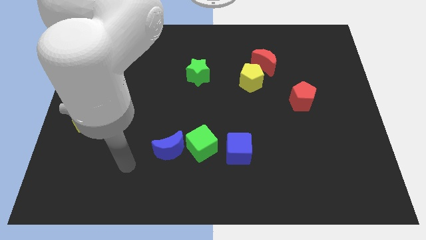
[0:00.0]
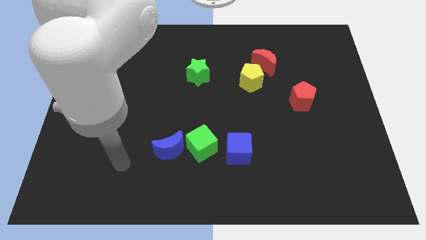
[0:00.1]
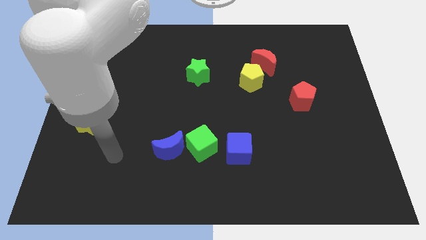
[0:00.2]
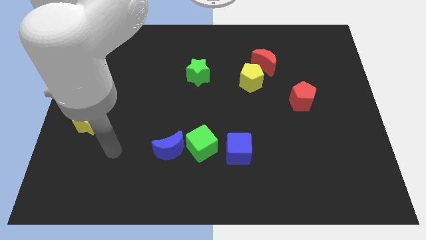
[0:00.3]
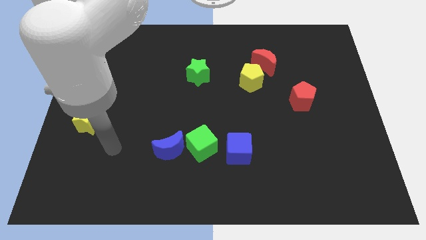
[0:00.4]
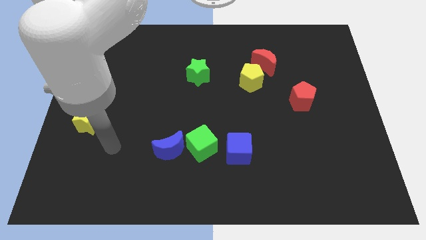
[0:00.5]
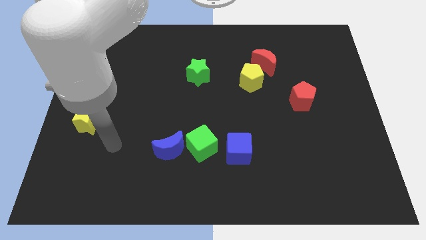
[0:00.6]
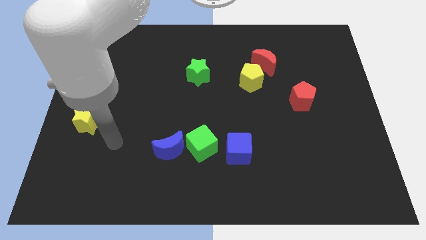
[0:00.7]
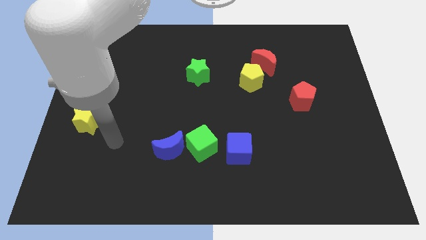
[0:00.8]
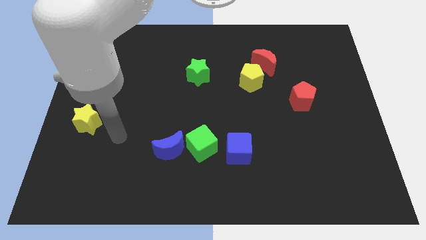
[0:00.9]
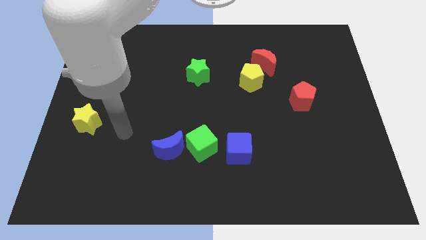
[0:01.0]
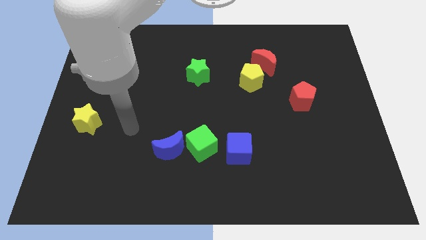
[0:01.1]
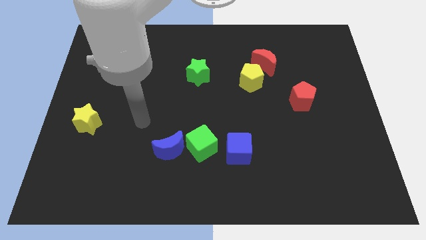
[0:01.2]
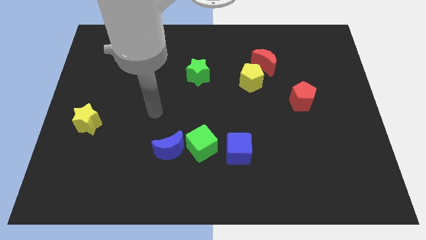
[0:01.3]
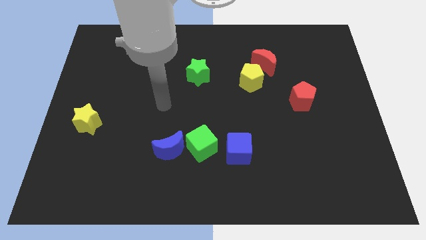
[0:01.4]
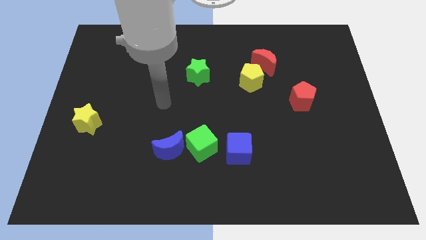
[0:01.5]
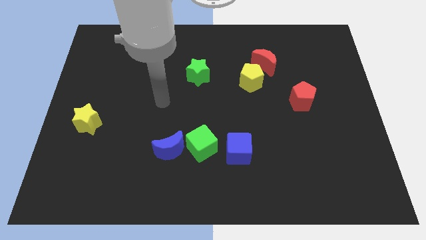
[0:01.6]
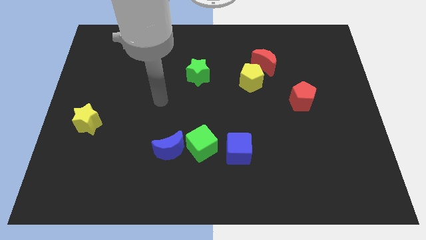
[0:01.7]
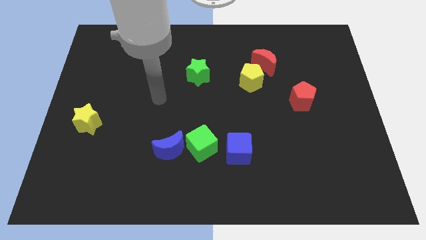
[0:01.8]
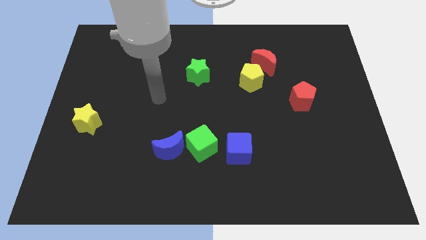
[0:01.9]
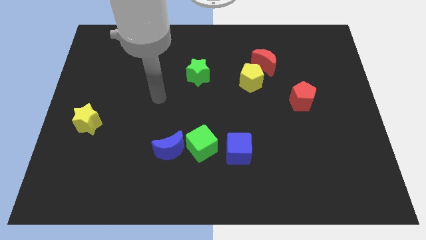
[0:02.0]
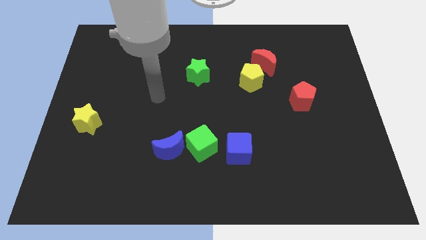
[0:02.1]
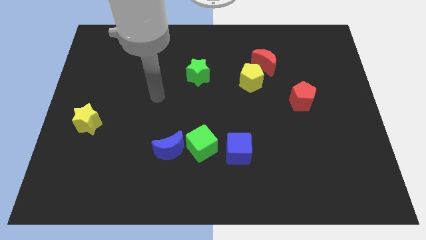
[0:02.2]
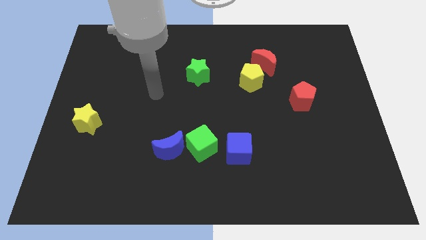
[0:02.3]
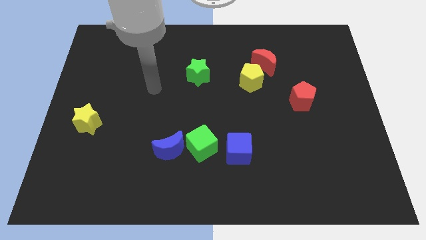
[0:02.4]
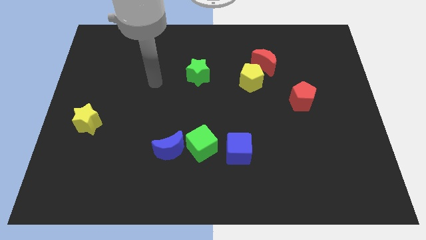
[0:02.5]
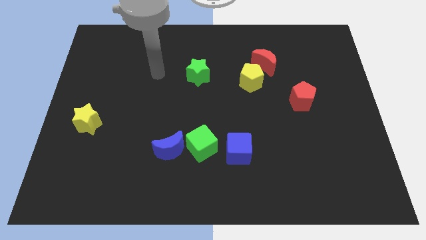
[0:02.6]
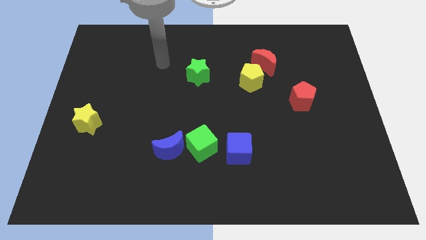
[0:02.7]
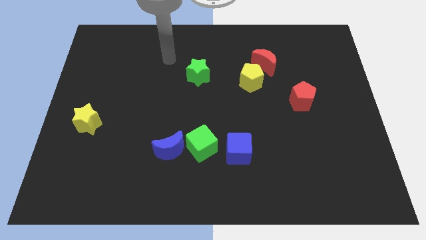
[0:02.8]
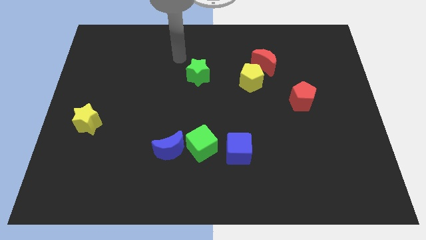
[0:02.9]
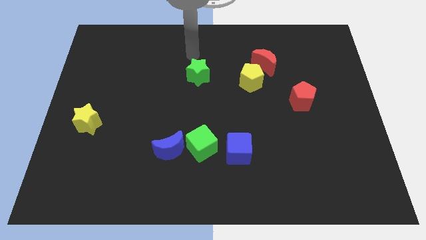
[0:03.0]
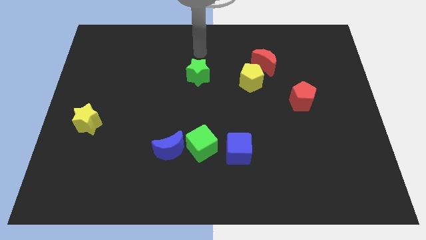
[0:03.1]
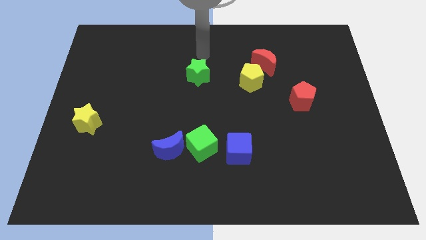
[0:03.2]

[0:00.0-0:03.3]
place your arm vertically above the green star

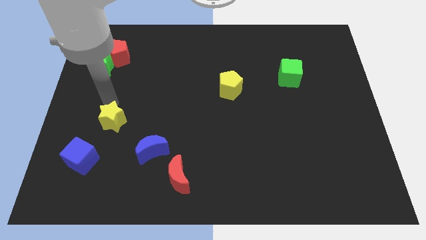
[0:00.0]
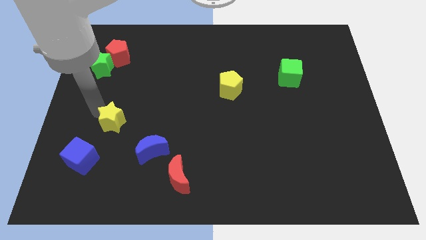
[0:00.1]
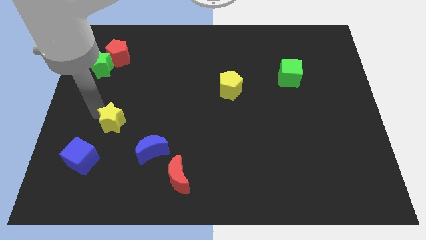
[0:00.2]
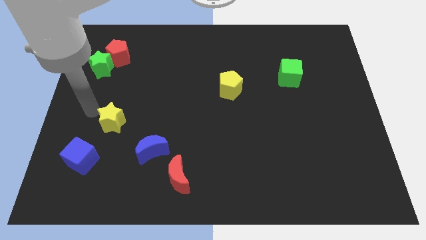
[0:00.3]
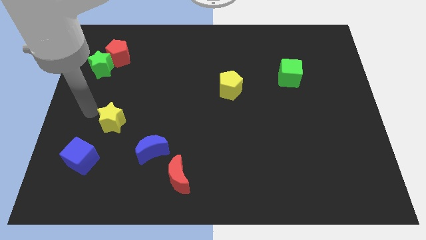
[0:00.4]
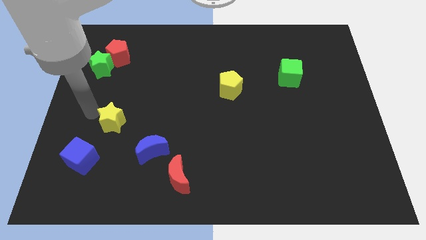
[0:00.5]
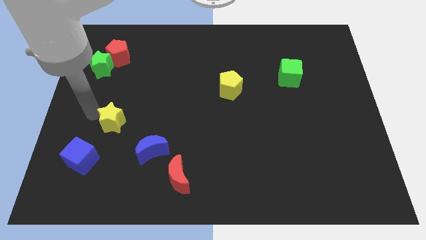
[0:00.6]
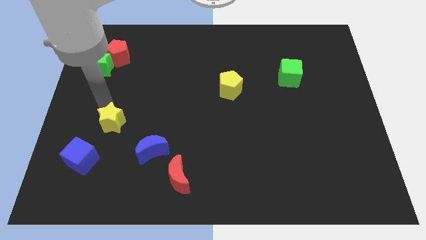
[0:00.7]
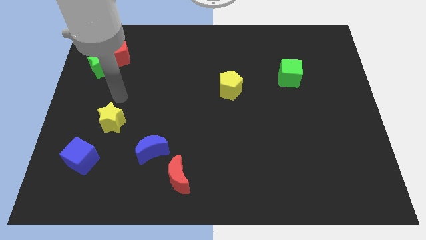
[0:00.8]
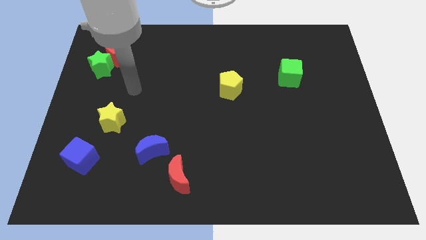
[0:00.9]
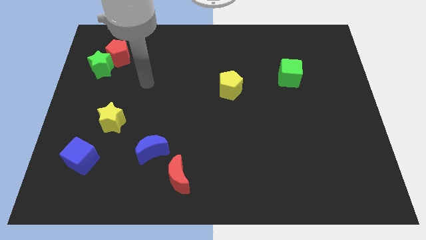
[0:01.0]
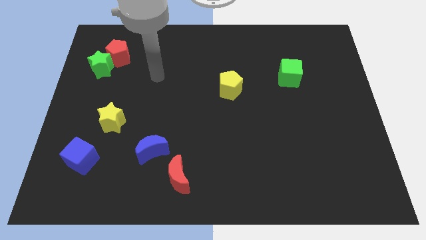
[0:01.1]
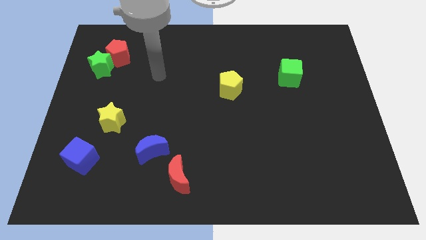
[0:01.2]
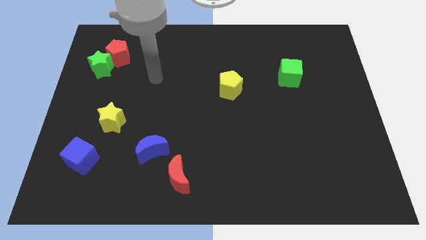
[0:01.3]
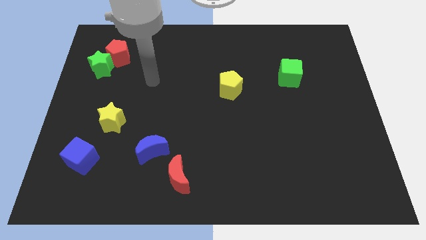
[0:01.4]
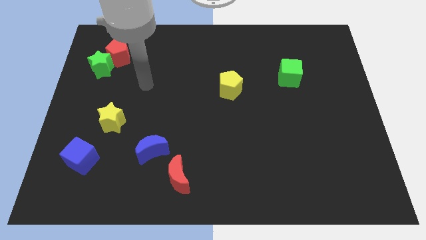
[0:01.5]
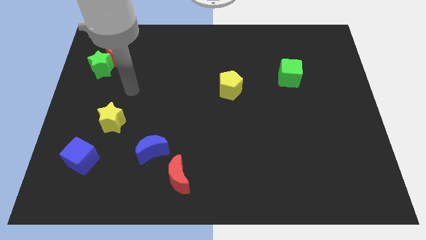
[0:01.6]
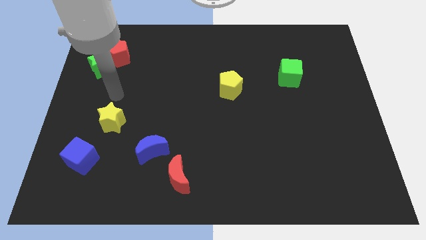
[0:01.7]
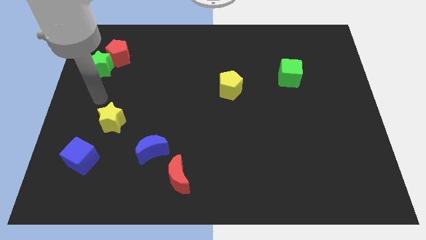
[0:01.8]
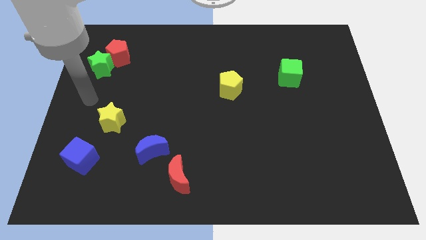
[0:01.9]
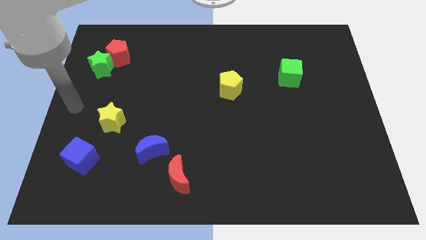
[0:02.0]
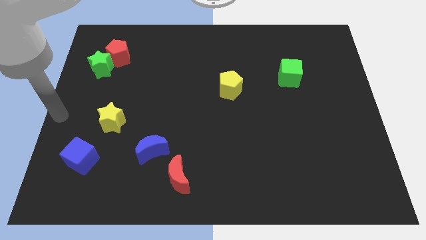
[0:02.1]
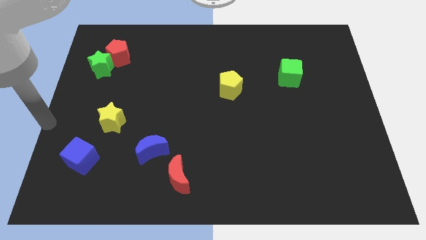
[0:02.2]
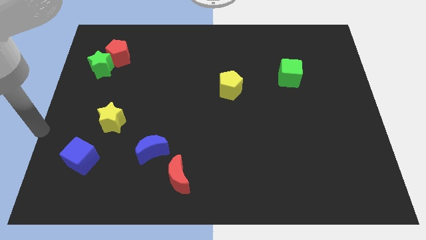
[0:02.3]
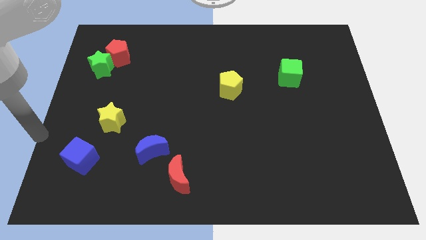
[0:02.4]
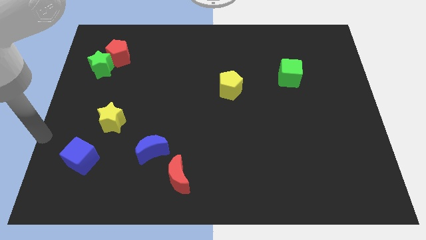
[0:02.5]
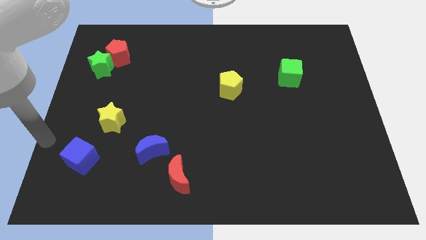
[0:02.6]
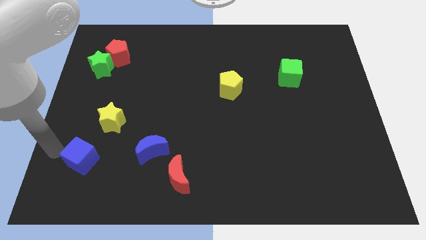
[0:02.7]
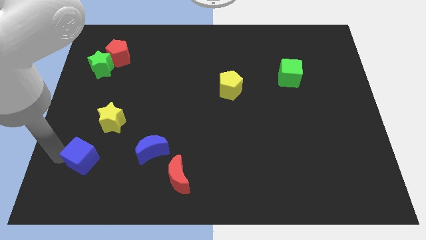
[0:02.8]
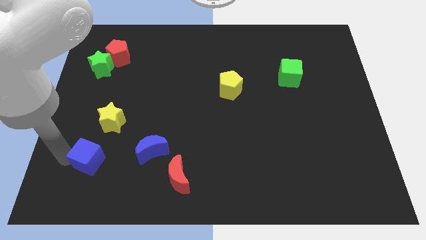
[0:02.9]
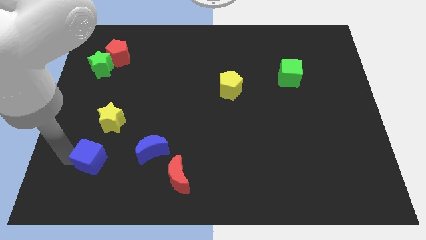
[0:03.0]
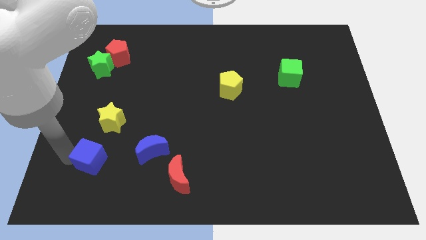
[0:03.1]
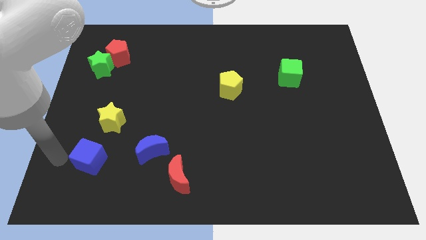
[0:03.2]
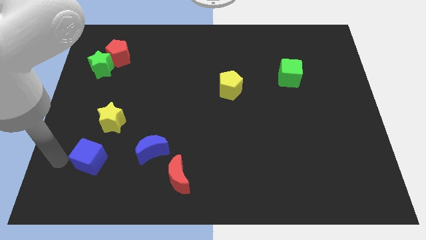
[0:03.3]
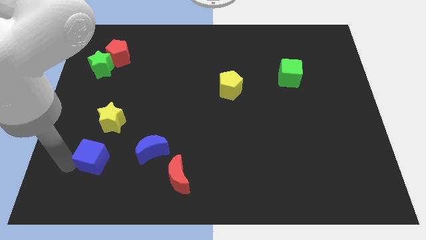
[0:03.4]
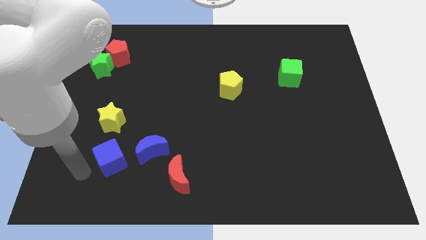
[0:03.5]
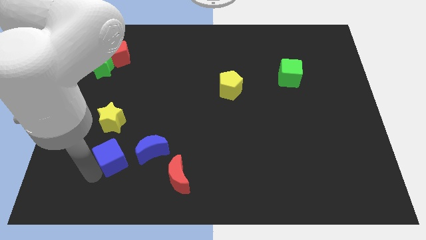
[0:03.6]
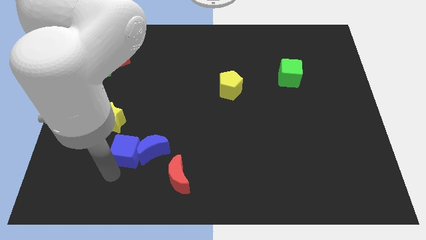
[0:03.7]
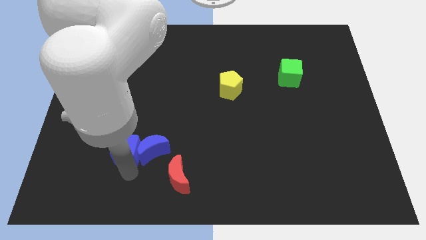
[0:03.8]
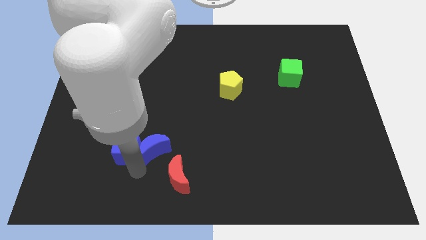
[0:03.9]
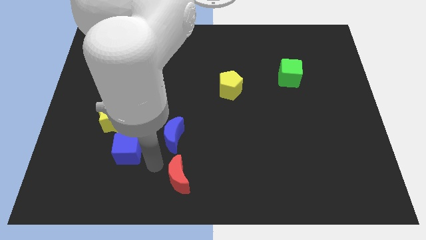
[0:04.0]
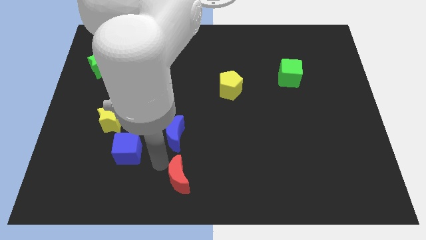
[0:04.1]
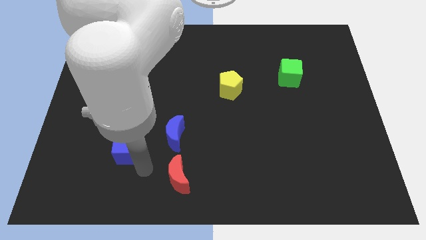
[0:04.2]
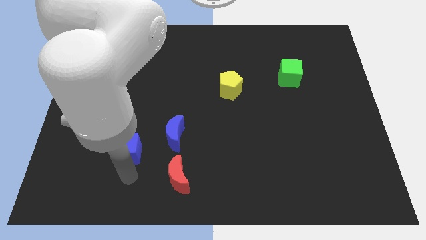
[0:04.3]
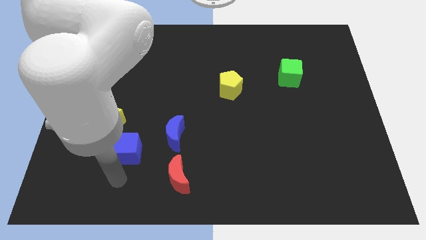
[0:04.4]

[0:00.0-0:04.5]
push blue cube diagonally to the bottom right of the yellow star

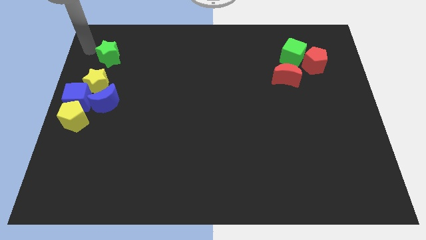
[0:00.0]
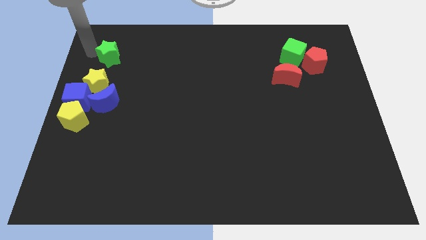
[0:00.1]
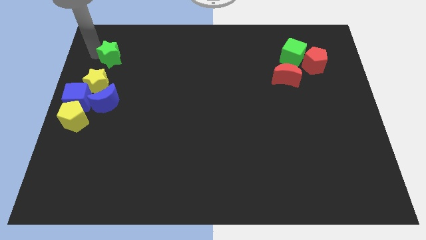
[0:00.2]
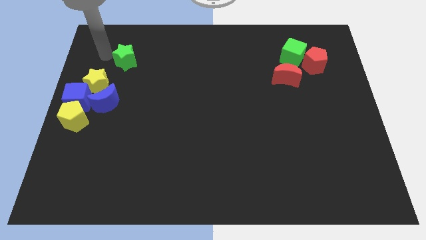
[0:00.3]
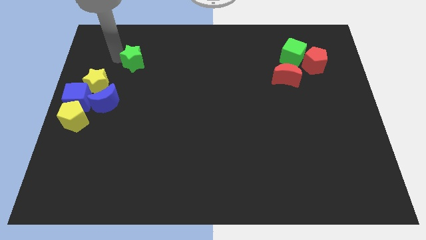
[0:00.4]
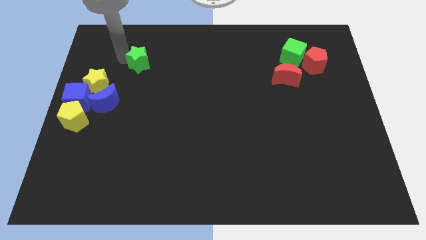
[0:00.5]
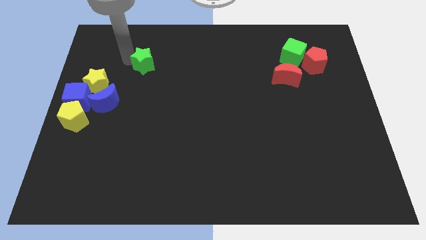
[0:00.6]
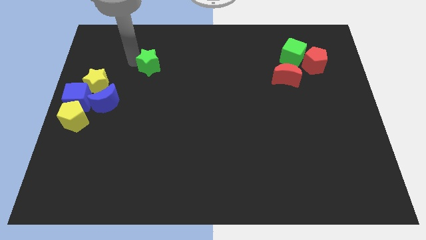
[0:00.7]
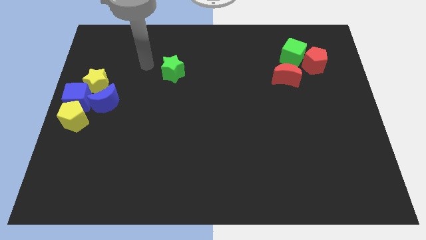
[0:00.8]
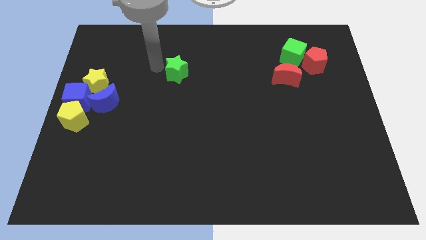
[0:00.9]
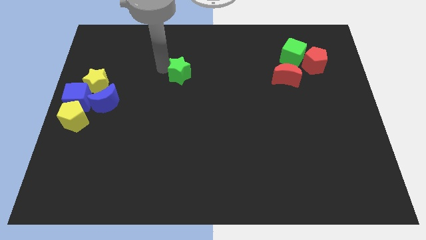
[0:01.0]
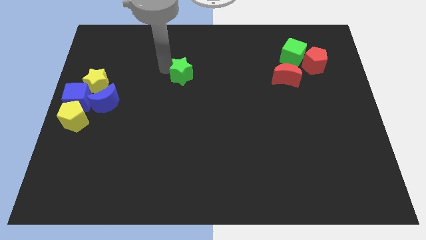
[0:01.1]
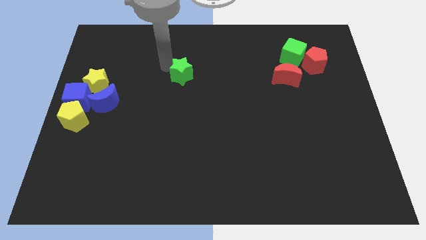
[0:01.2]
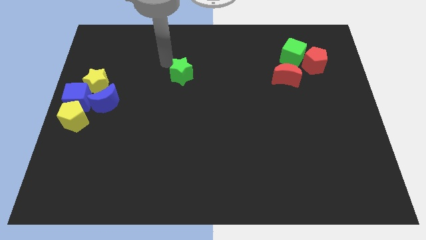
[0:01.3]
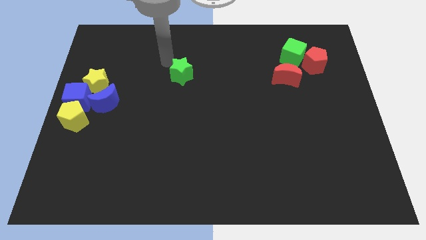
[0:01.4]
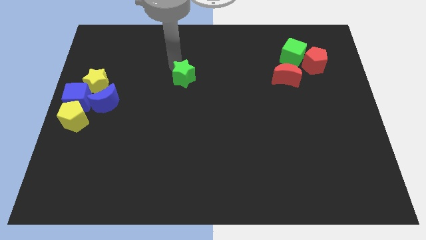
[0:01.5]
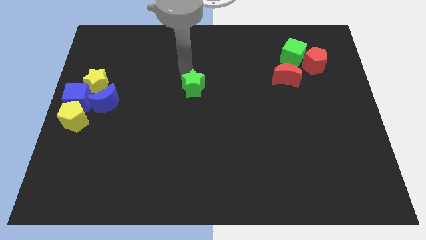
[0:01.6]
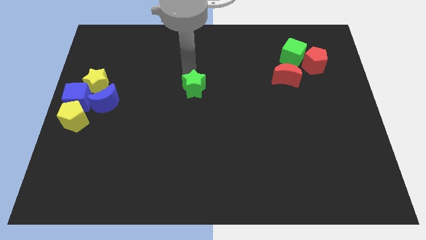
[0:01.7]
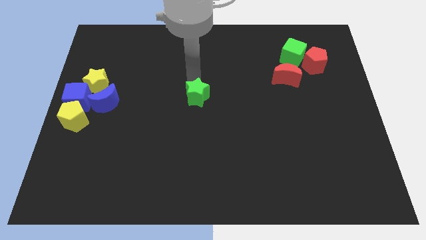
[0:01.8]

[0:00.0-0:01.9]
push the green star to the centre of the board
